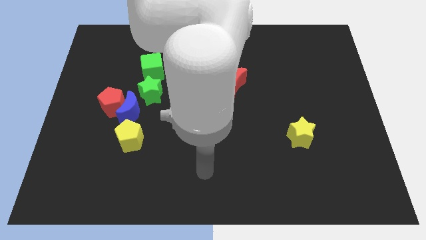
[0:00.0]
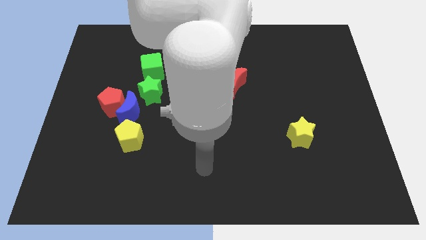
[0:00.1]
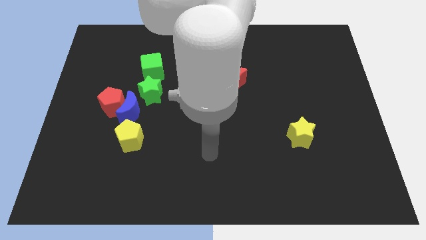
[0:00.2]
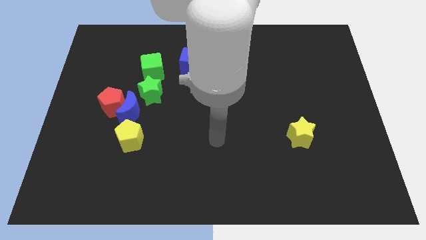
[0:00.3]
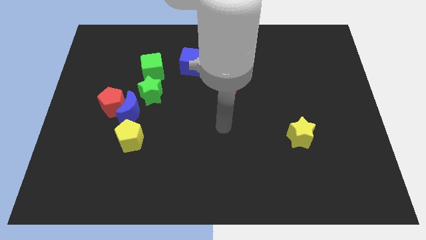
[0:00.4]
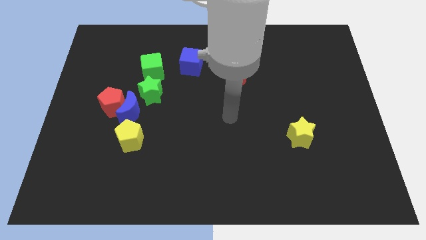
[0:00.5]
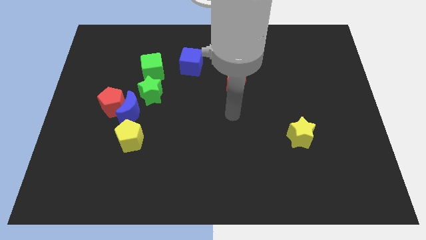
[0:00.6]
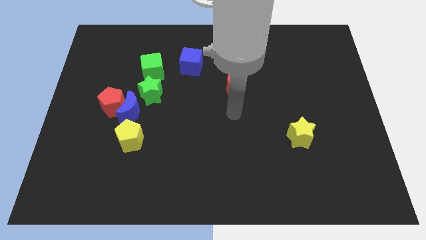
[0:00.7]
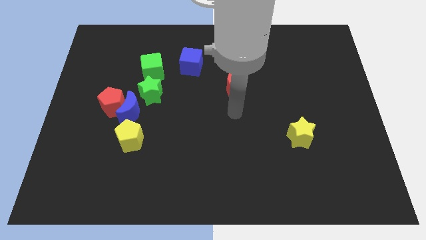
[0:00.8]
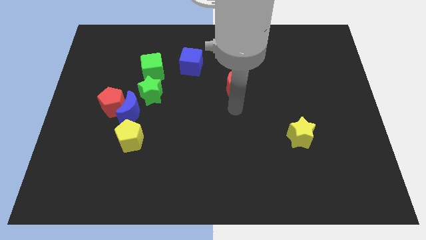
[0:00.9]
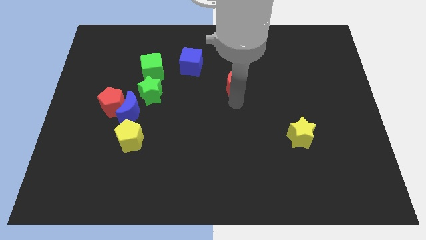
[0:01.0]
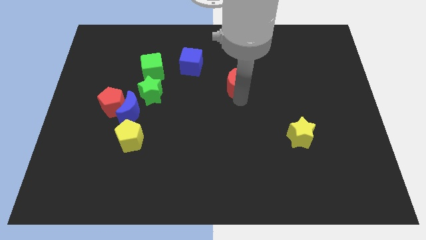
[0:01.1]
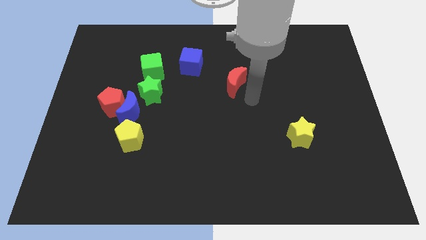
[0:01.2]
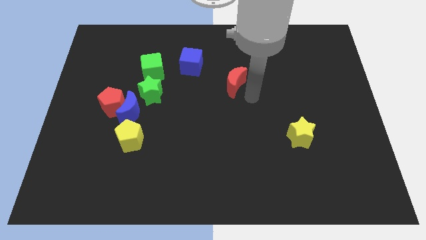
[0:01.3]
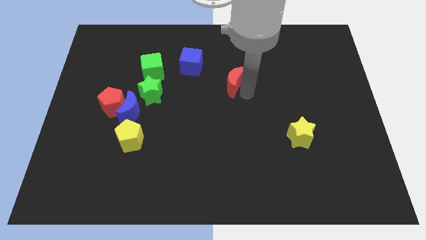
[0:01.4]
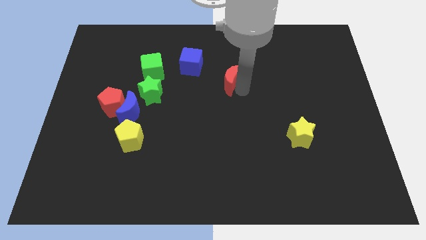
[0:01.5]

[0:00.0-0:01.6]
move your arm towards the right of the red crescent

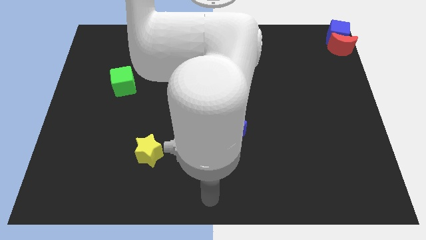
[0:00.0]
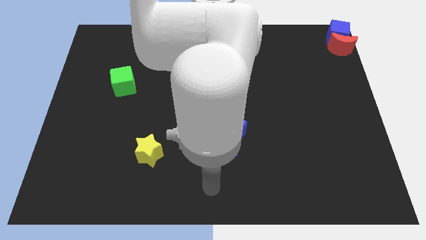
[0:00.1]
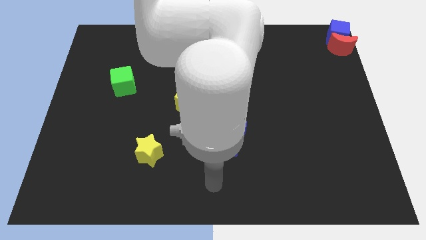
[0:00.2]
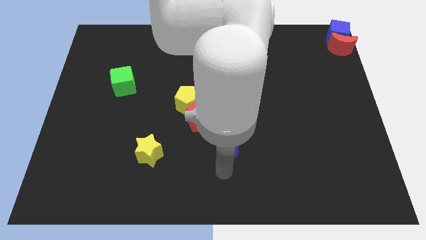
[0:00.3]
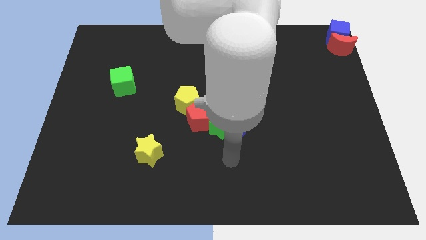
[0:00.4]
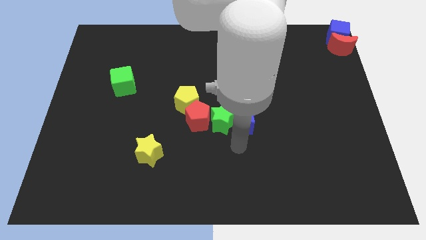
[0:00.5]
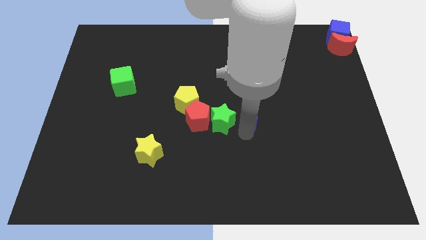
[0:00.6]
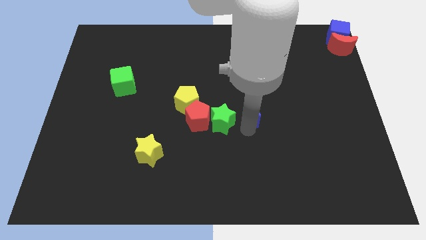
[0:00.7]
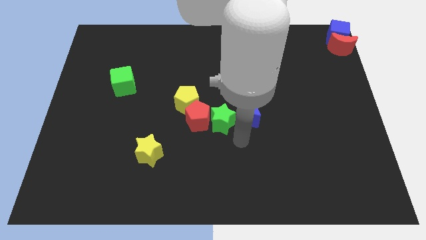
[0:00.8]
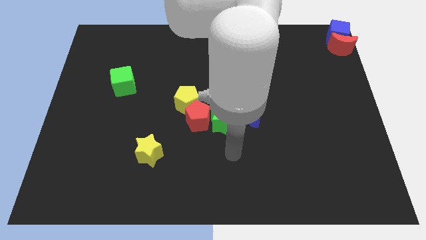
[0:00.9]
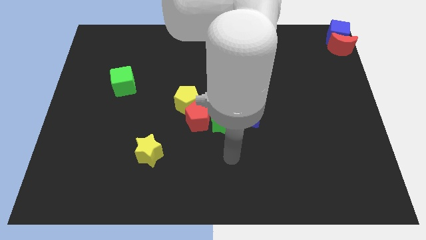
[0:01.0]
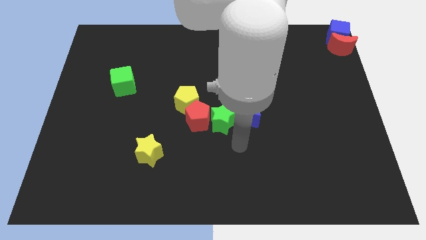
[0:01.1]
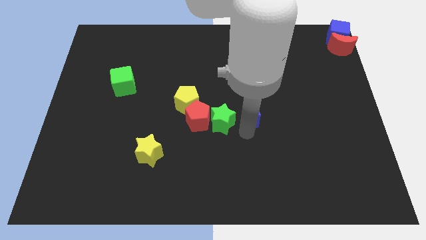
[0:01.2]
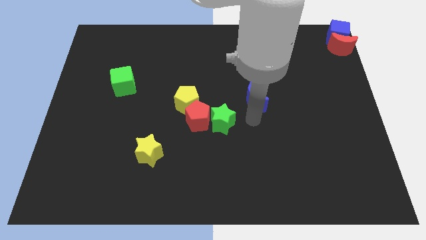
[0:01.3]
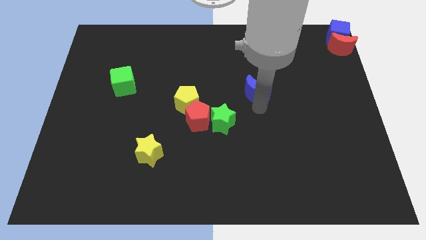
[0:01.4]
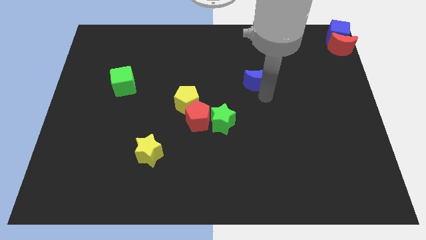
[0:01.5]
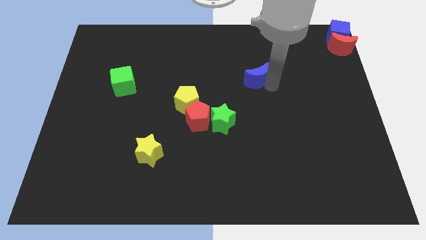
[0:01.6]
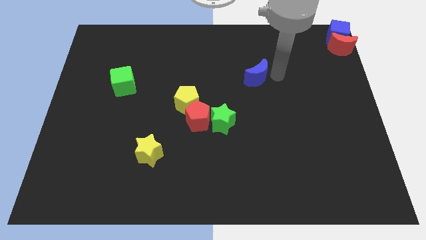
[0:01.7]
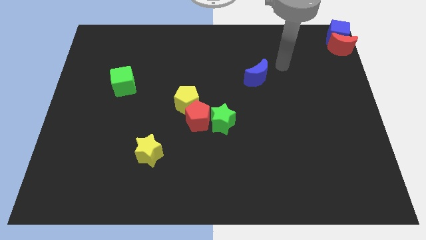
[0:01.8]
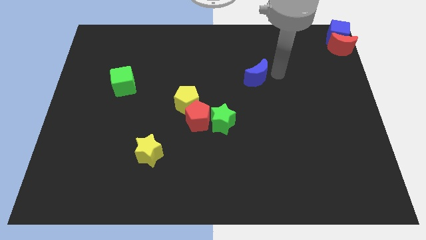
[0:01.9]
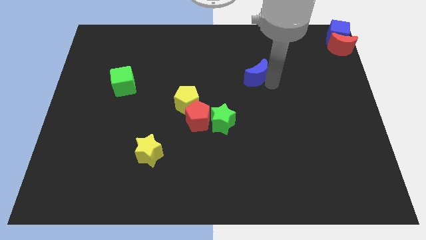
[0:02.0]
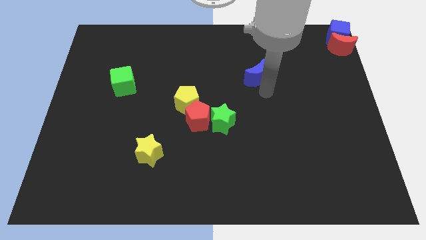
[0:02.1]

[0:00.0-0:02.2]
separate the blue moon from the green star

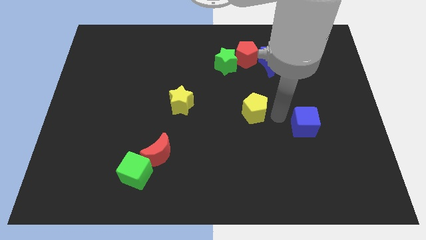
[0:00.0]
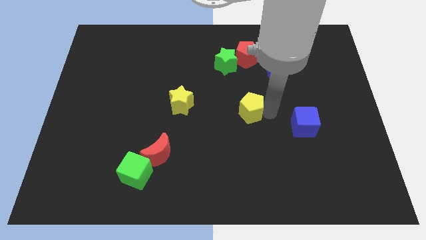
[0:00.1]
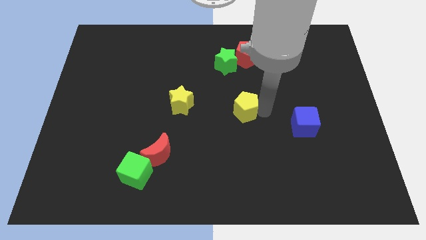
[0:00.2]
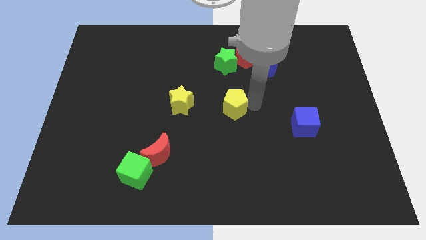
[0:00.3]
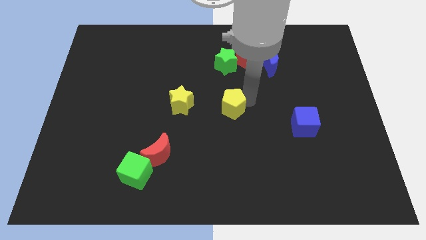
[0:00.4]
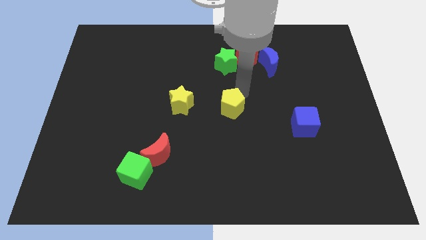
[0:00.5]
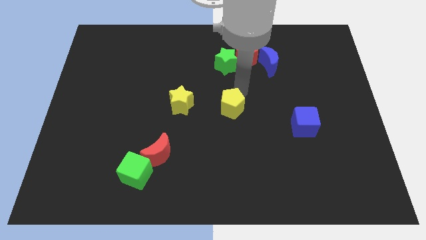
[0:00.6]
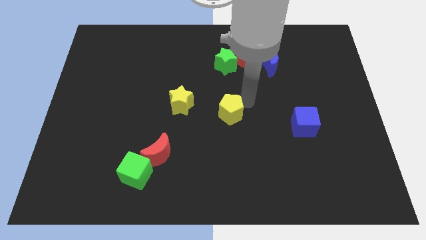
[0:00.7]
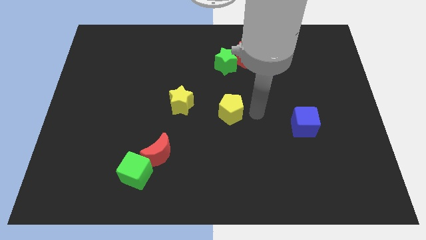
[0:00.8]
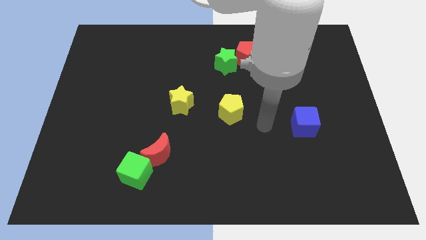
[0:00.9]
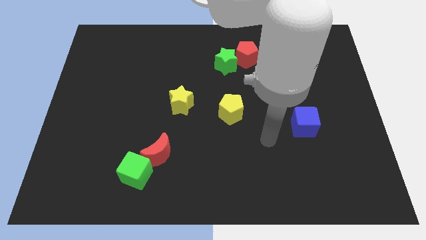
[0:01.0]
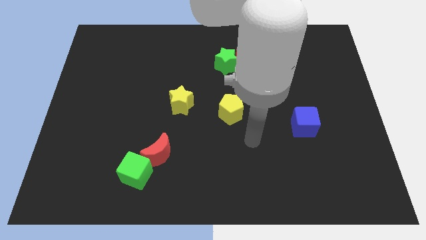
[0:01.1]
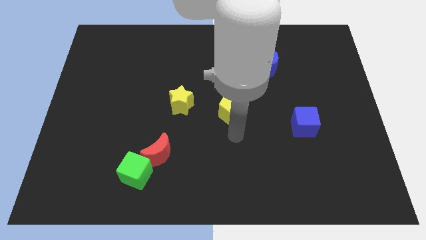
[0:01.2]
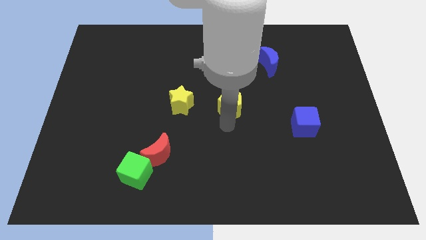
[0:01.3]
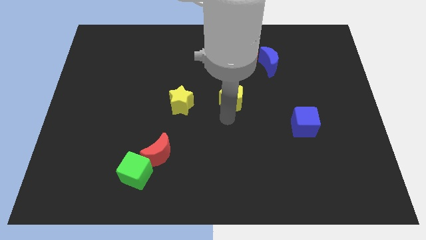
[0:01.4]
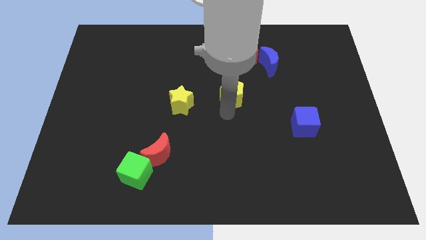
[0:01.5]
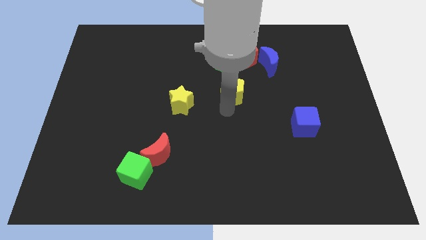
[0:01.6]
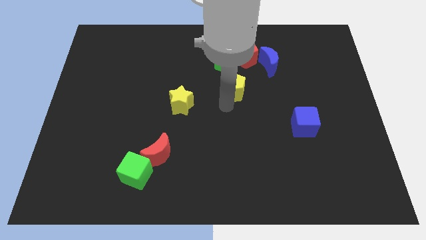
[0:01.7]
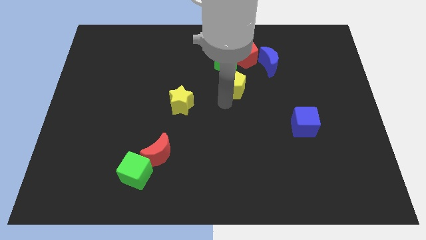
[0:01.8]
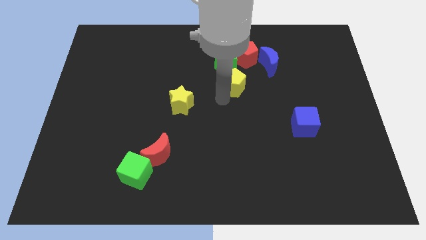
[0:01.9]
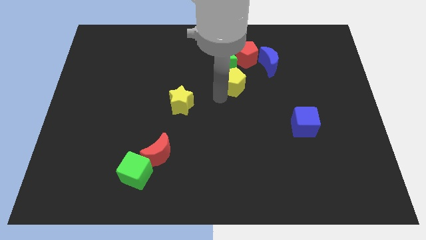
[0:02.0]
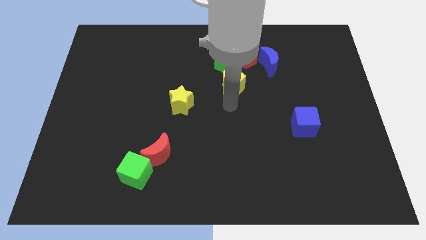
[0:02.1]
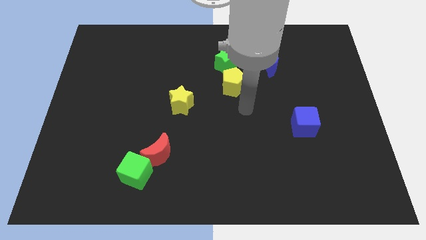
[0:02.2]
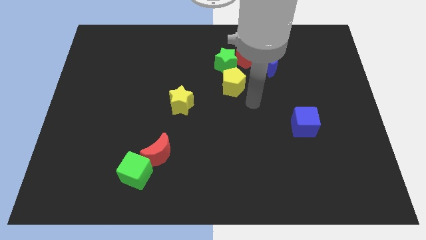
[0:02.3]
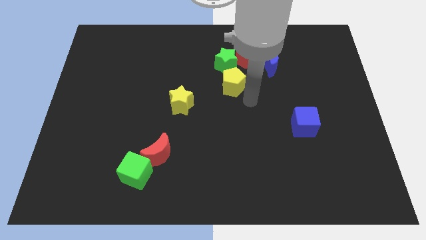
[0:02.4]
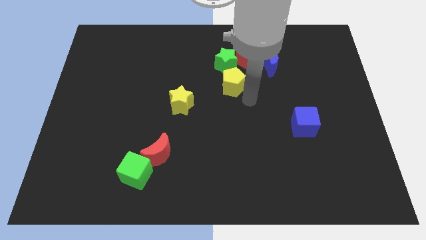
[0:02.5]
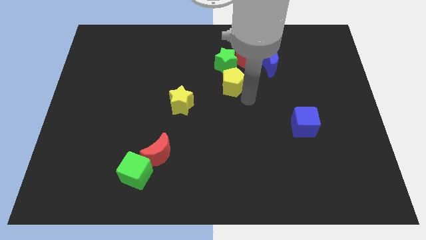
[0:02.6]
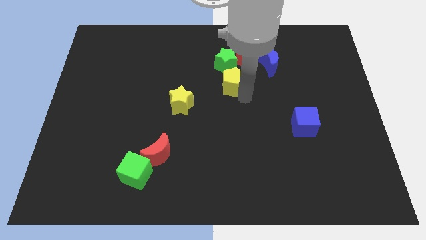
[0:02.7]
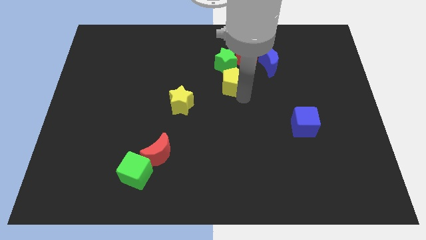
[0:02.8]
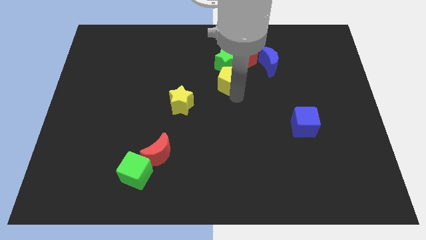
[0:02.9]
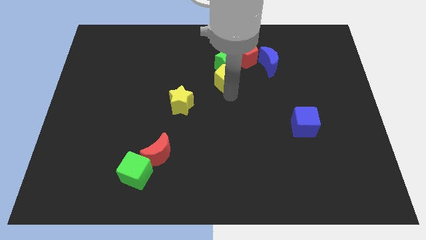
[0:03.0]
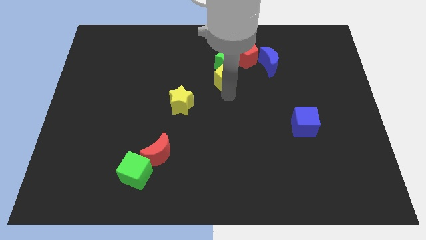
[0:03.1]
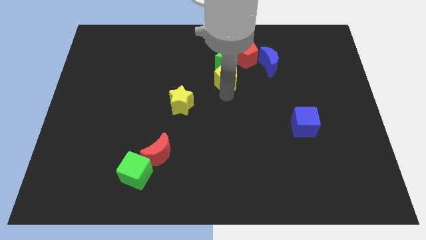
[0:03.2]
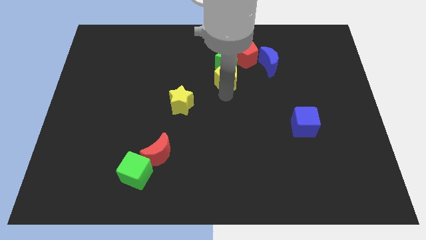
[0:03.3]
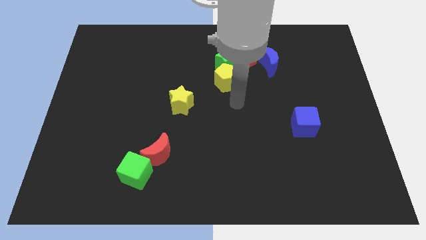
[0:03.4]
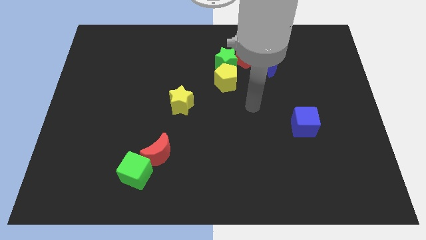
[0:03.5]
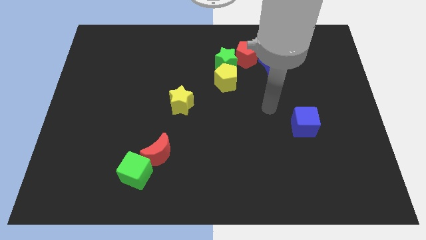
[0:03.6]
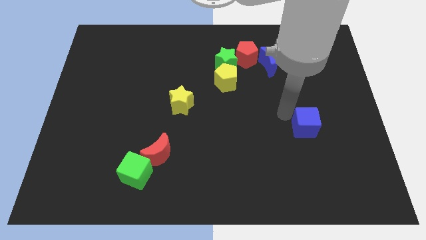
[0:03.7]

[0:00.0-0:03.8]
take the yellow pentagon close to the bottom of the green star

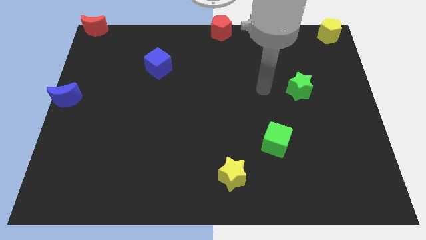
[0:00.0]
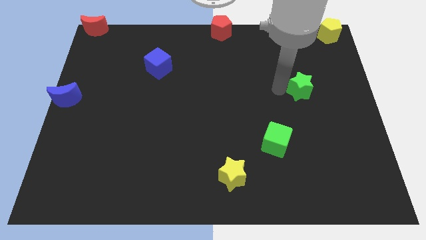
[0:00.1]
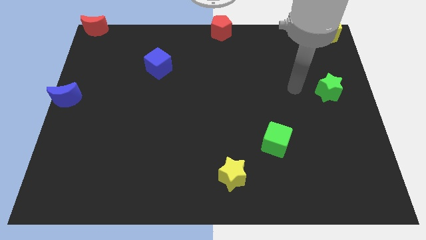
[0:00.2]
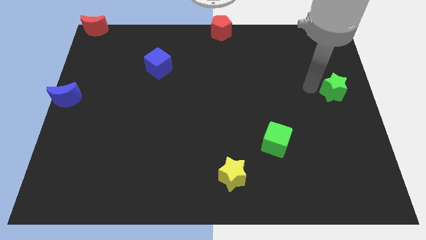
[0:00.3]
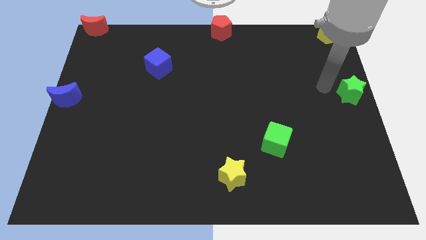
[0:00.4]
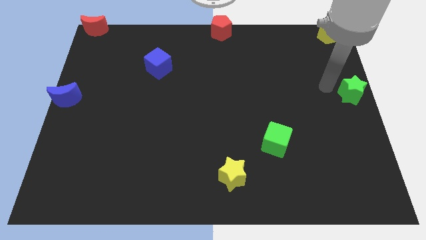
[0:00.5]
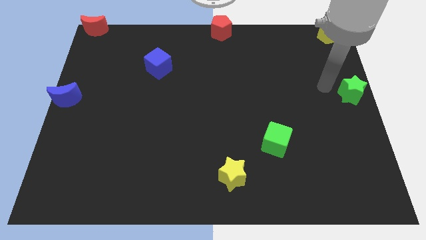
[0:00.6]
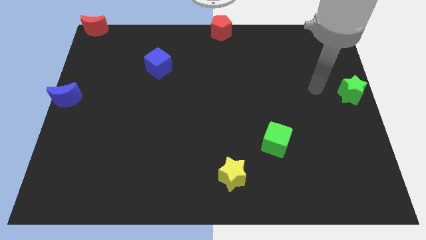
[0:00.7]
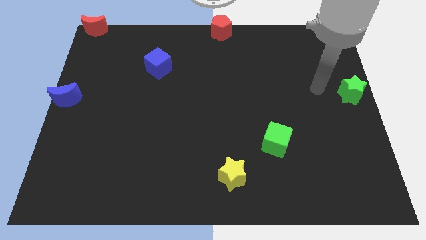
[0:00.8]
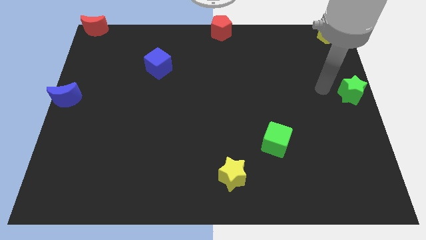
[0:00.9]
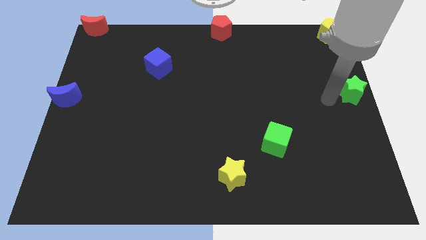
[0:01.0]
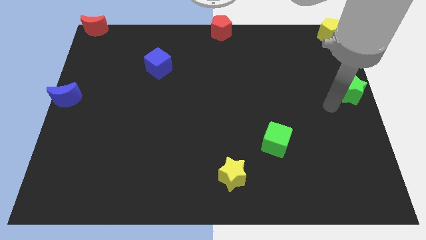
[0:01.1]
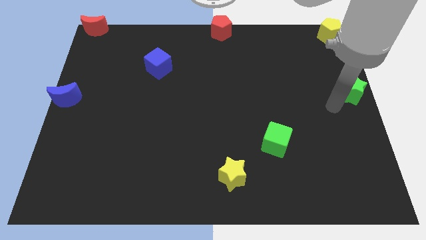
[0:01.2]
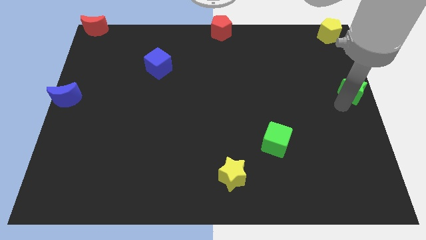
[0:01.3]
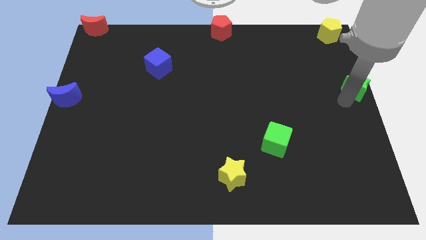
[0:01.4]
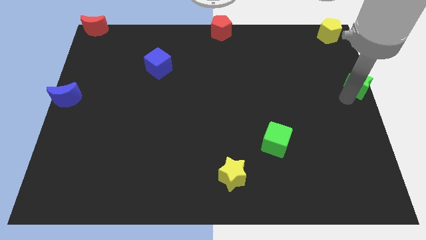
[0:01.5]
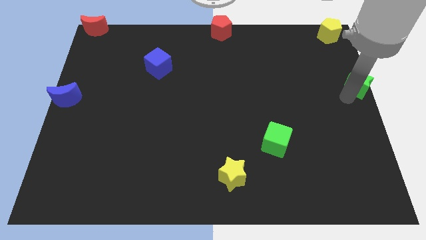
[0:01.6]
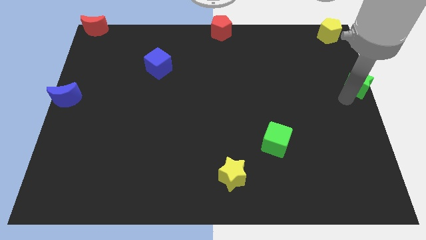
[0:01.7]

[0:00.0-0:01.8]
move the green star to the center right of the board
